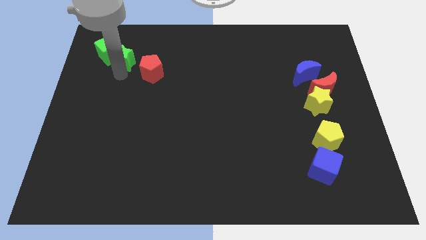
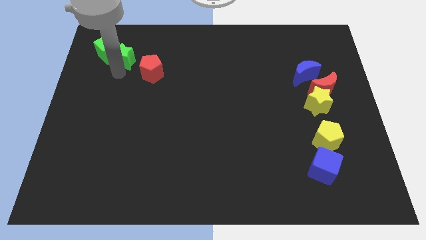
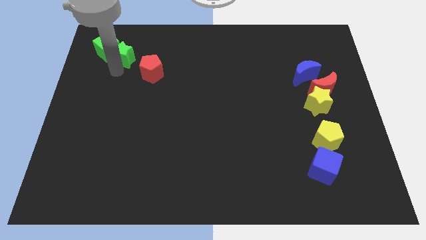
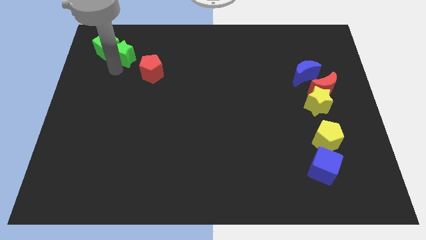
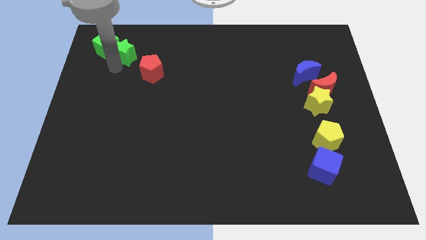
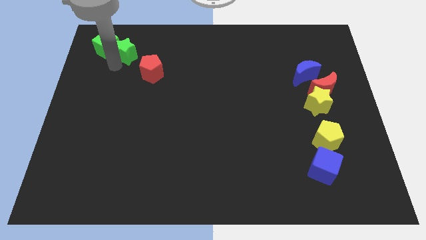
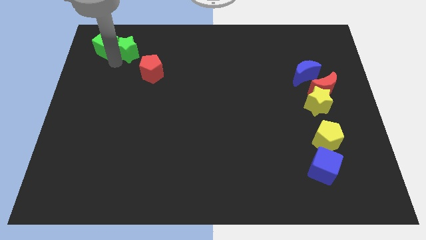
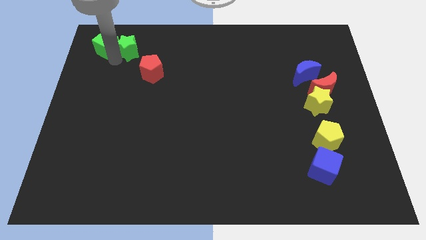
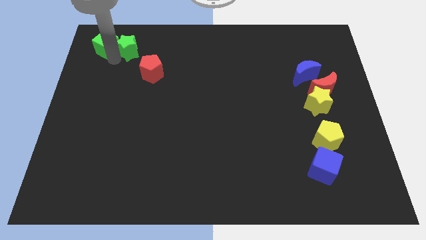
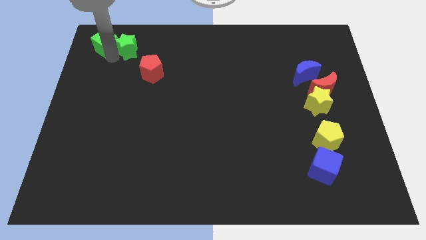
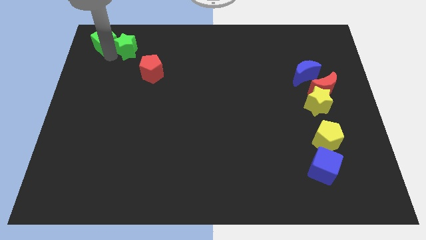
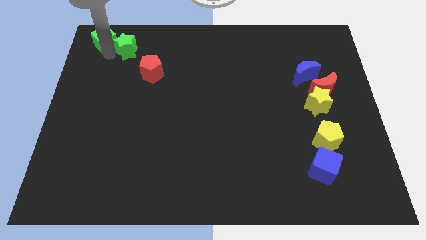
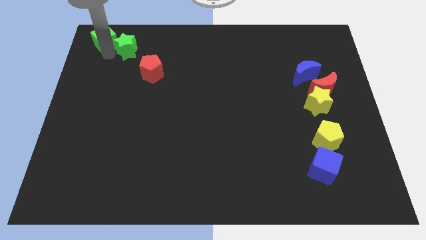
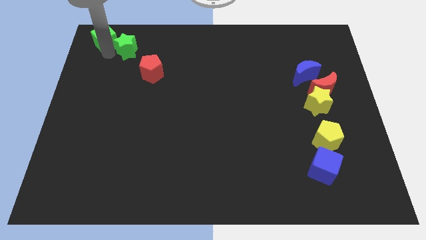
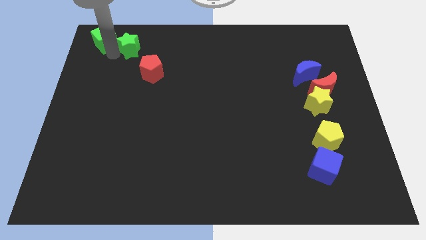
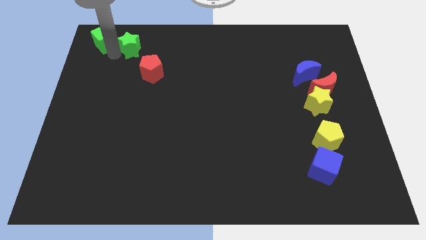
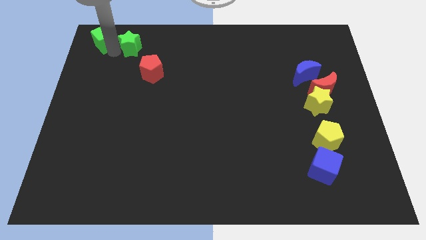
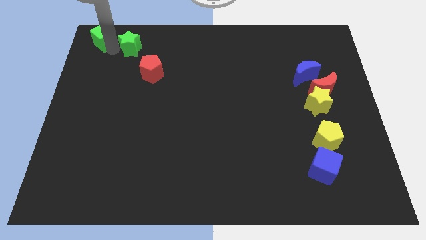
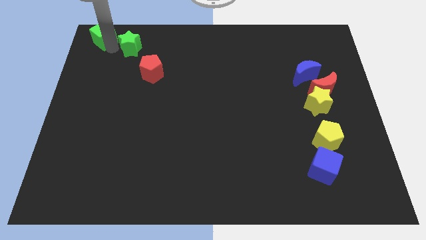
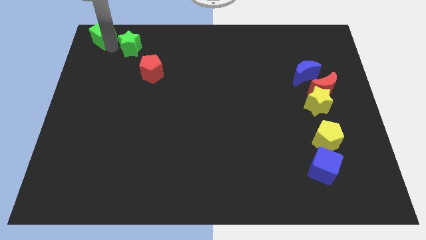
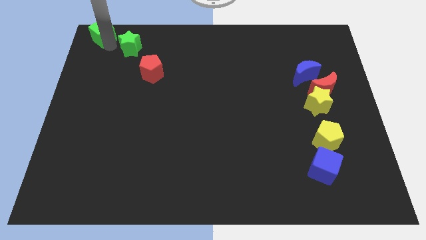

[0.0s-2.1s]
place the green cube at the top left corner of the board

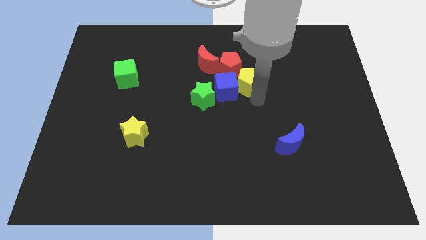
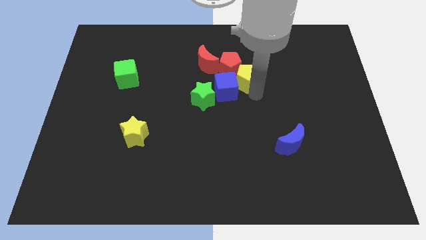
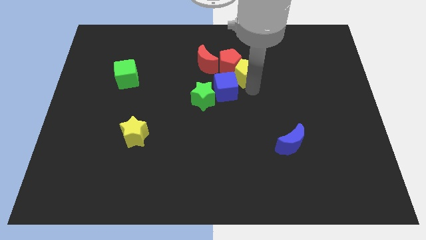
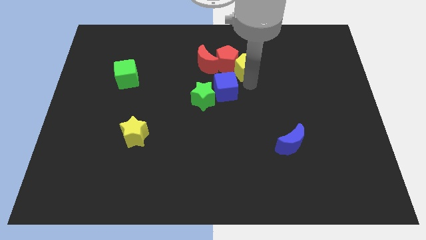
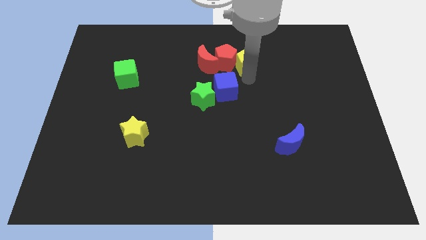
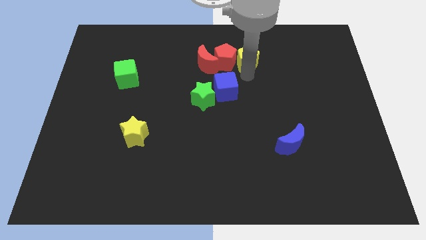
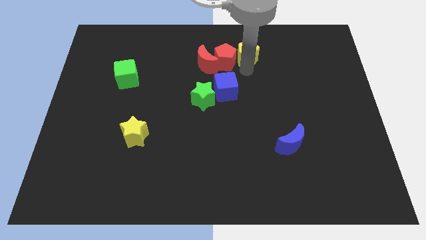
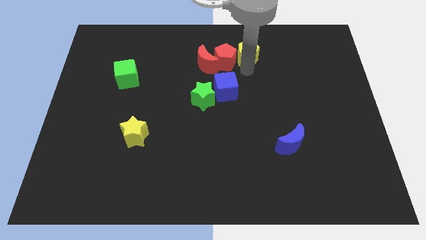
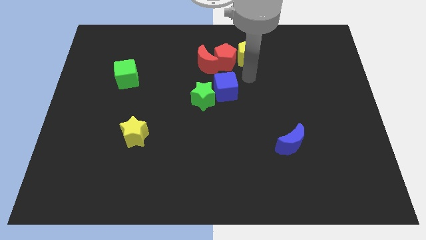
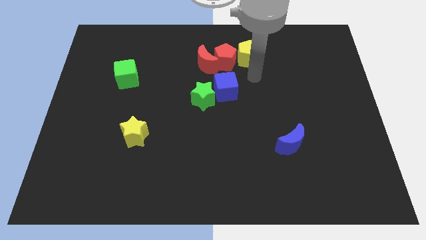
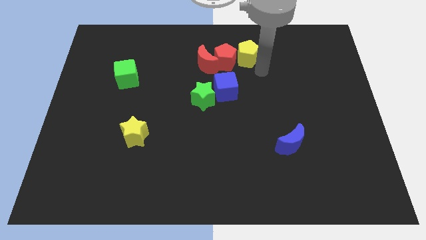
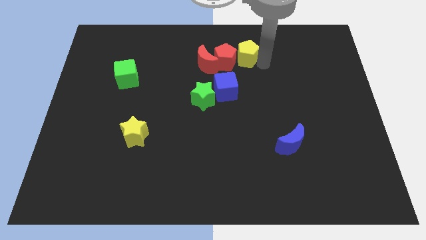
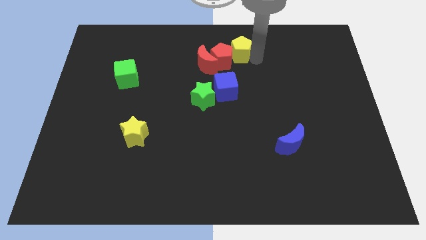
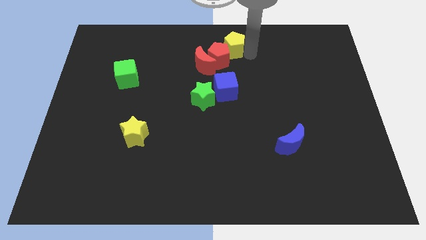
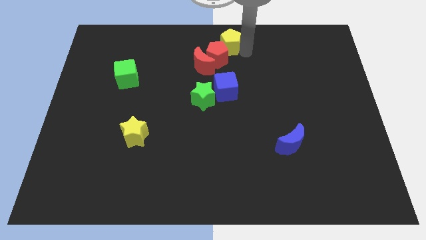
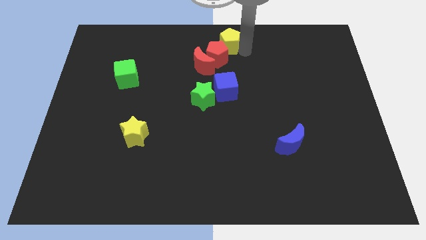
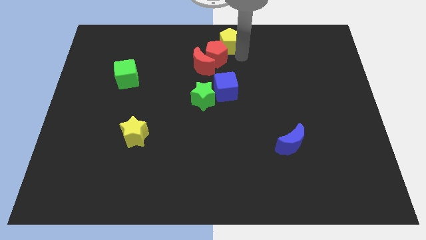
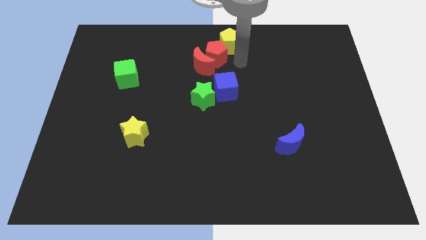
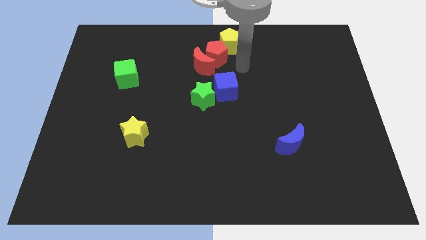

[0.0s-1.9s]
adjust the yellow pentagon diagonally top right to the red pentagon

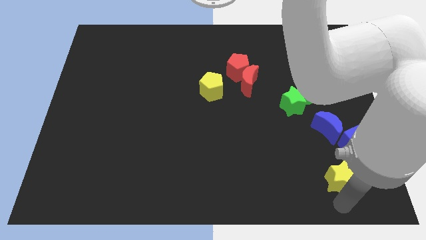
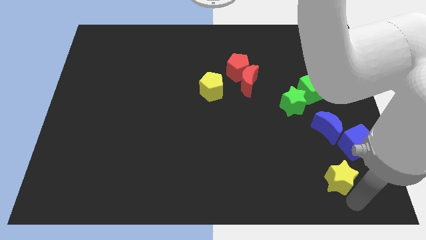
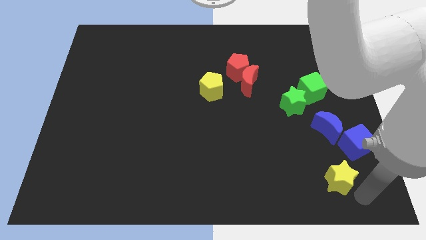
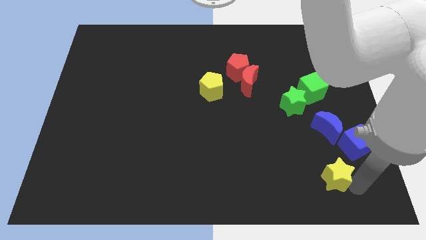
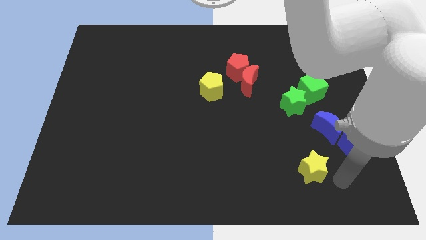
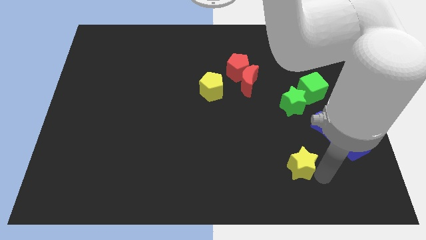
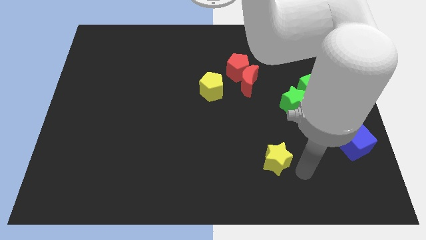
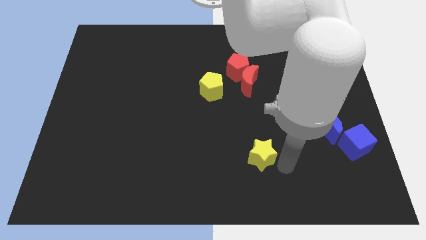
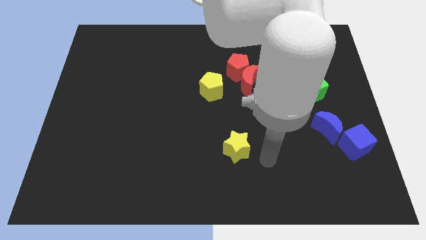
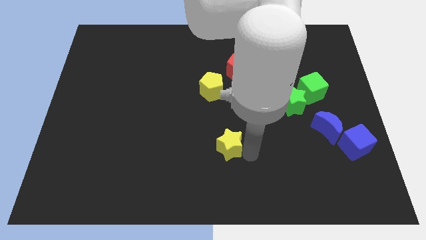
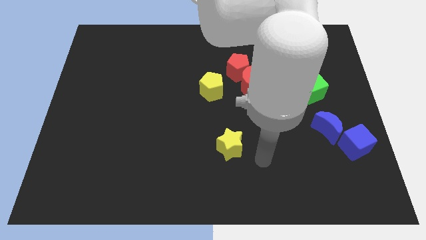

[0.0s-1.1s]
move the yellow star to the centre of the board

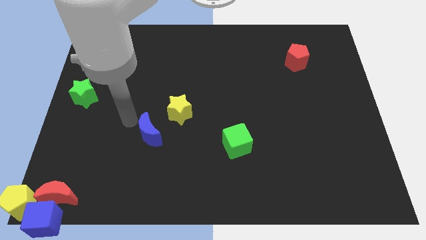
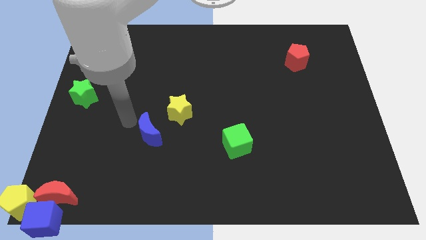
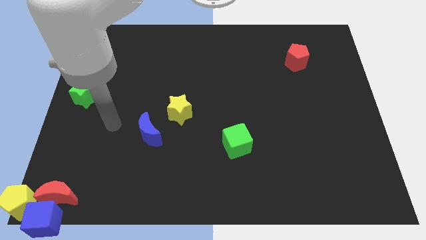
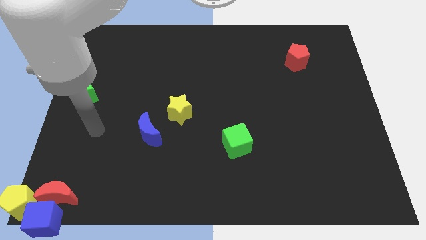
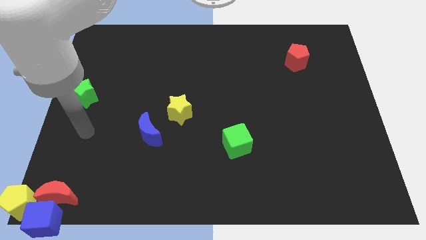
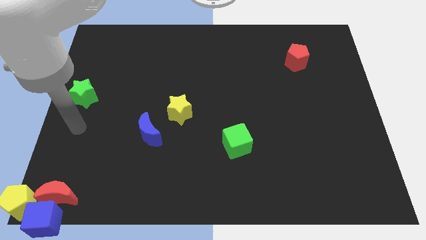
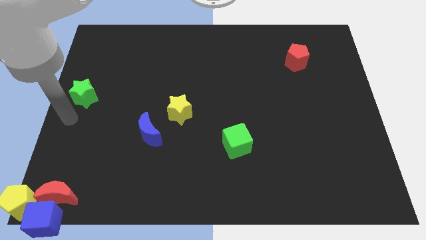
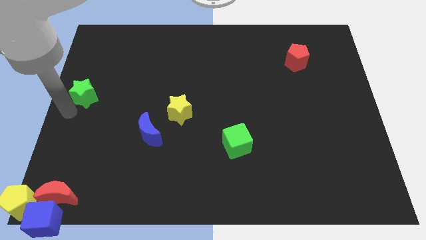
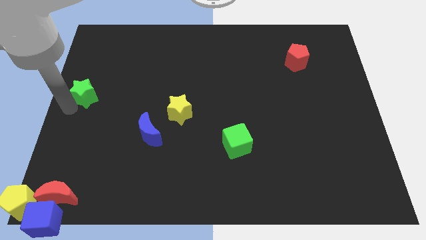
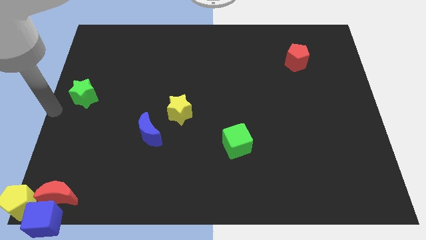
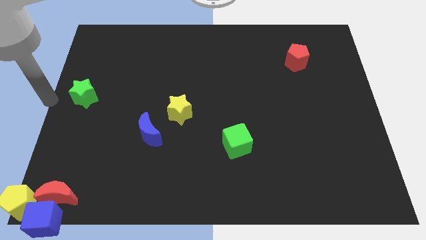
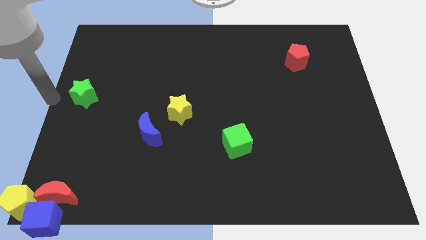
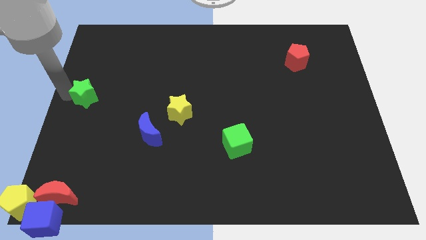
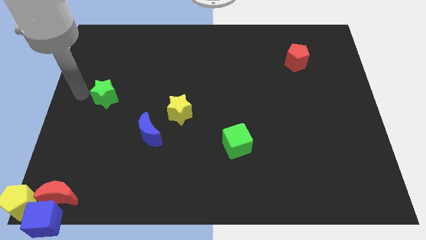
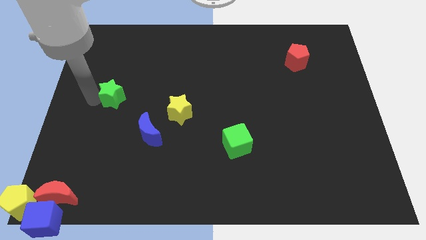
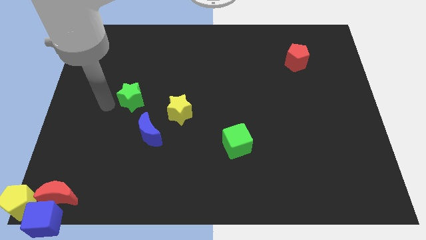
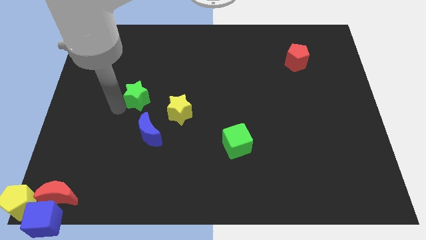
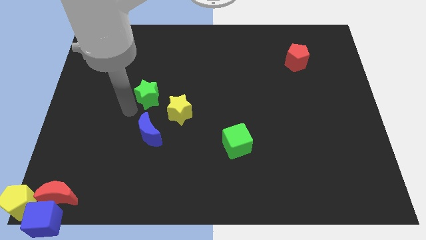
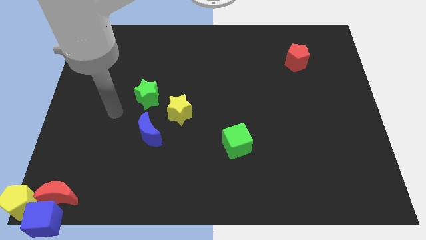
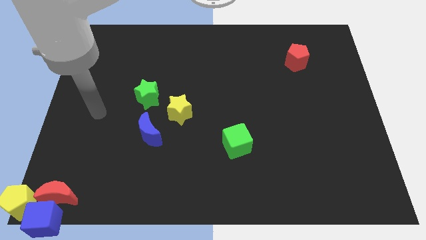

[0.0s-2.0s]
place the green star above the blue crescent

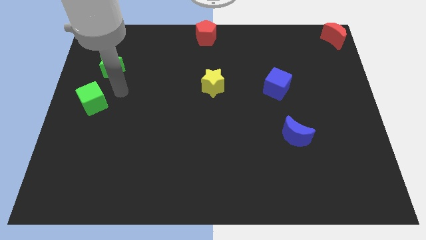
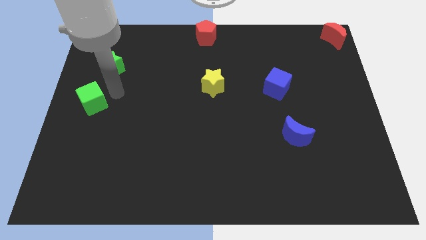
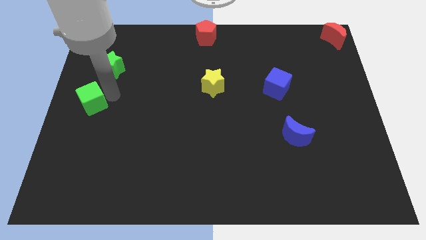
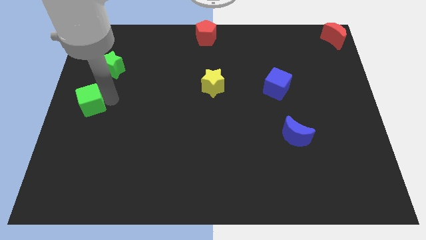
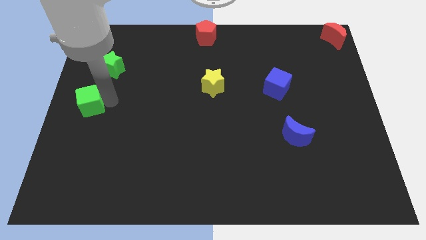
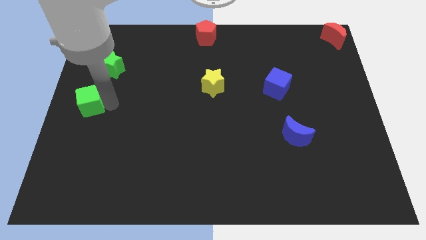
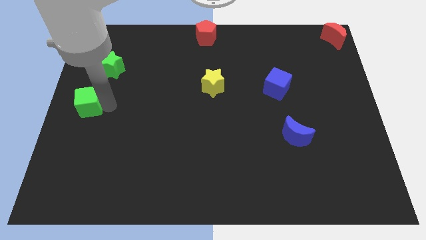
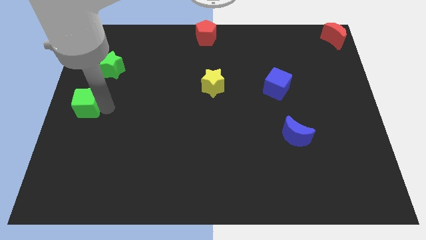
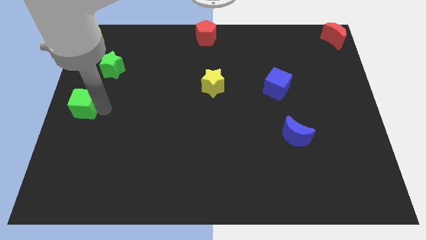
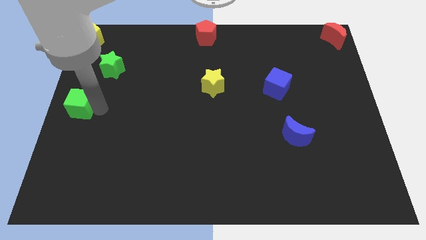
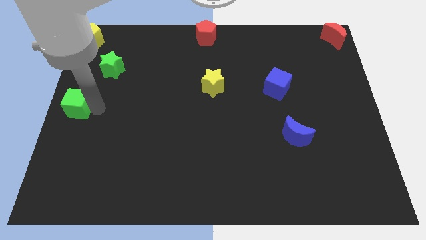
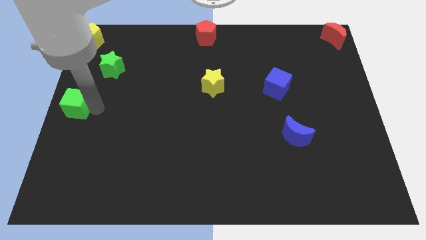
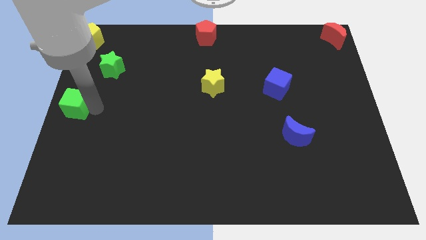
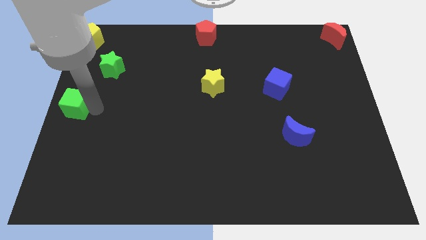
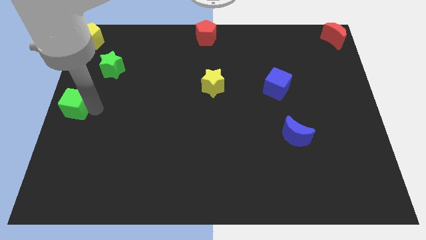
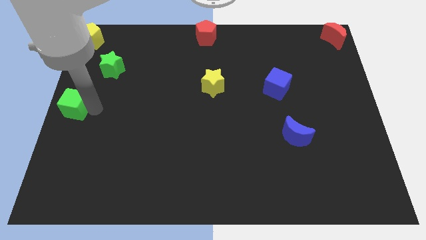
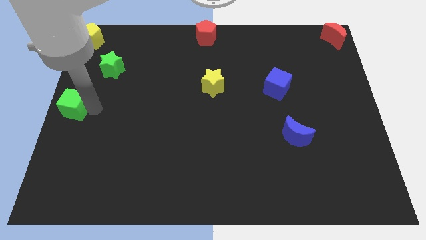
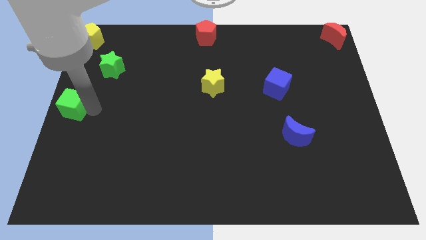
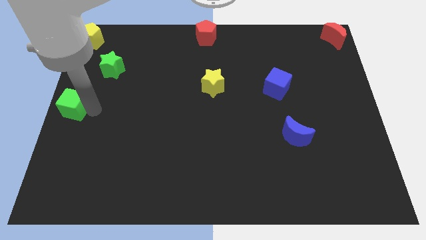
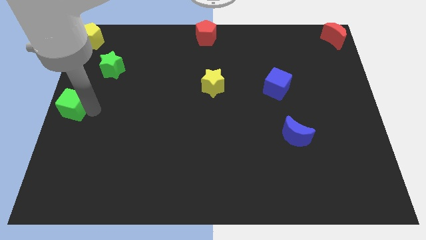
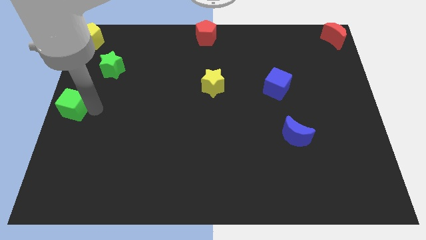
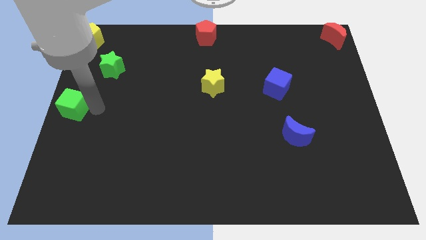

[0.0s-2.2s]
move the green cube to the left center of the board
